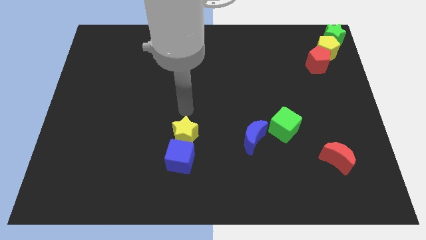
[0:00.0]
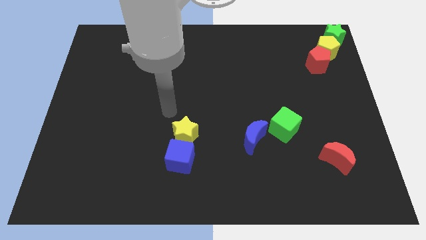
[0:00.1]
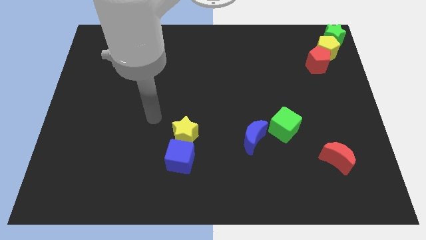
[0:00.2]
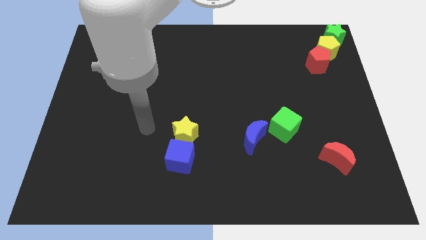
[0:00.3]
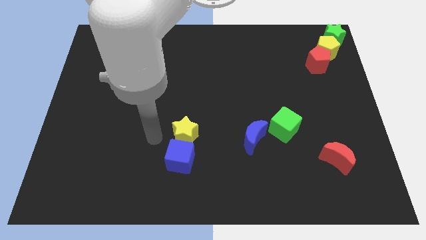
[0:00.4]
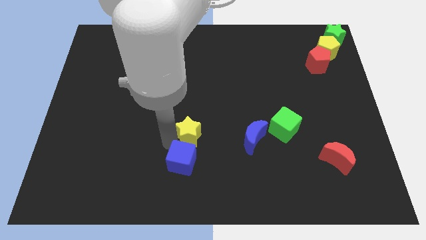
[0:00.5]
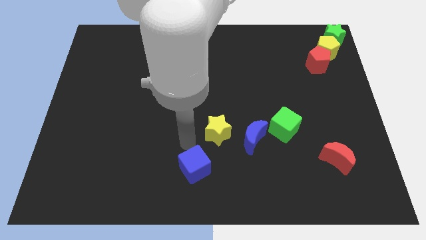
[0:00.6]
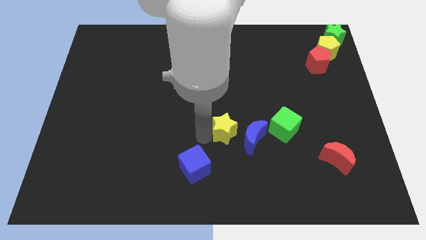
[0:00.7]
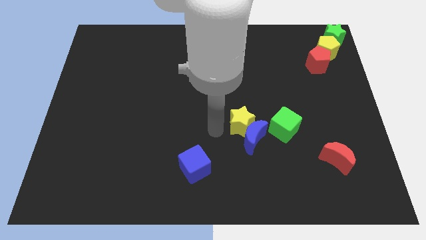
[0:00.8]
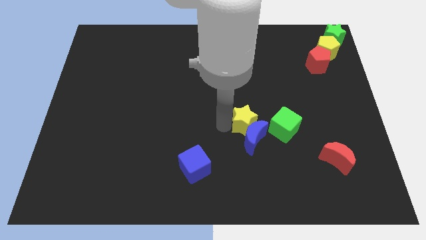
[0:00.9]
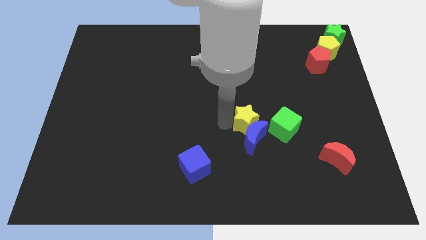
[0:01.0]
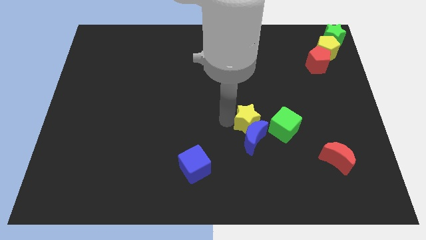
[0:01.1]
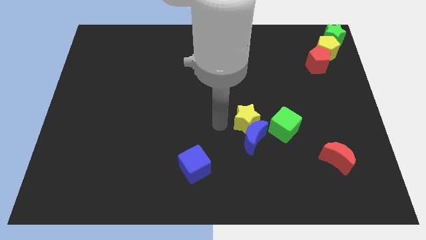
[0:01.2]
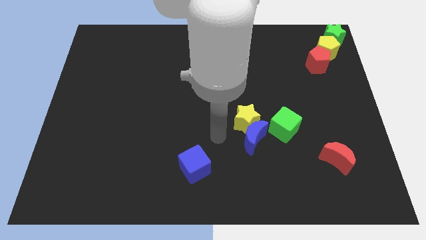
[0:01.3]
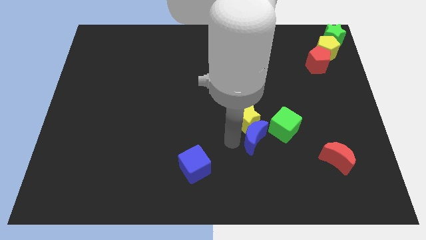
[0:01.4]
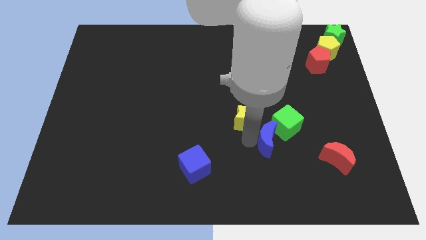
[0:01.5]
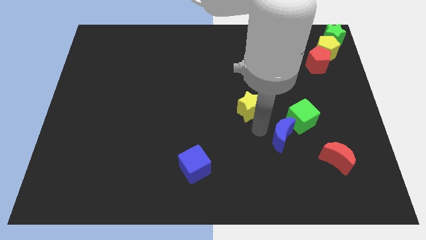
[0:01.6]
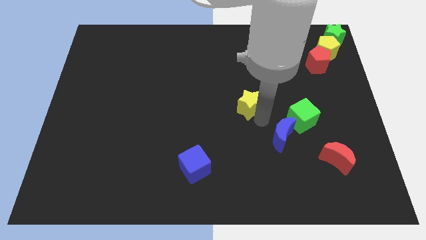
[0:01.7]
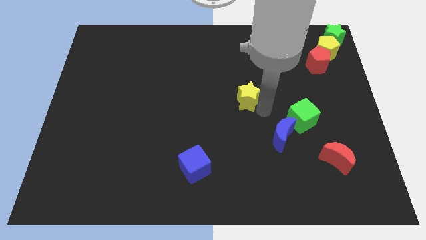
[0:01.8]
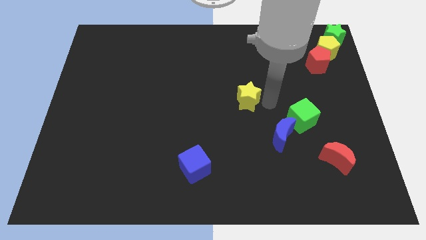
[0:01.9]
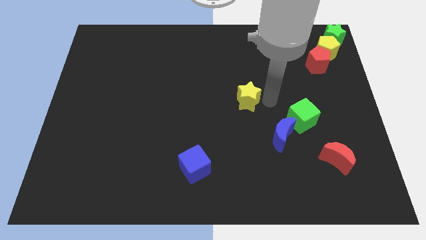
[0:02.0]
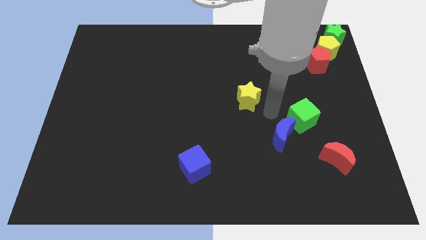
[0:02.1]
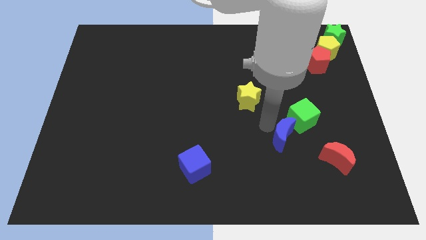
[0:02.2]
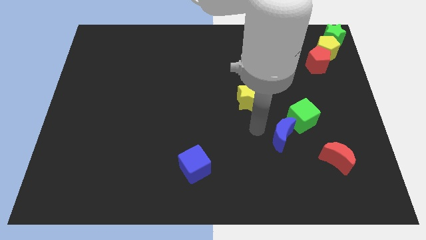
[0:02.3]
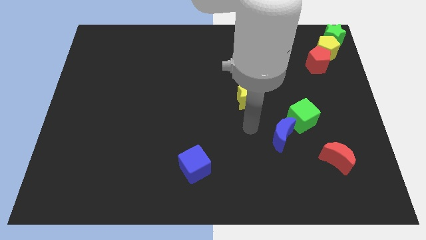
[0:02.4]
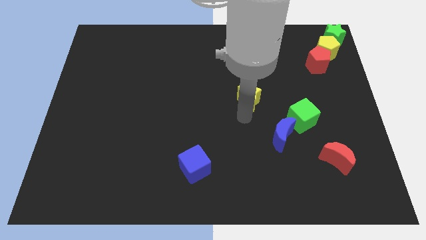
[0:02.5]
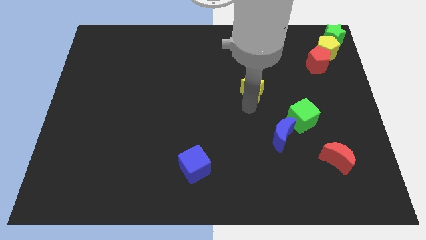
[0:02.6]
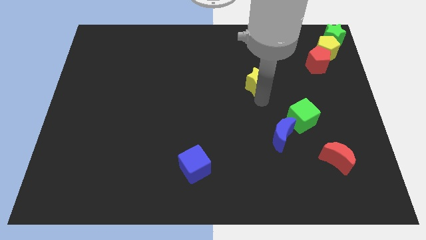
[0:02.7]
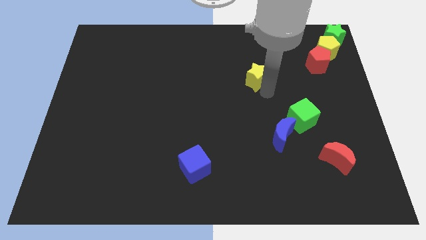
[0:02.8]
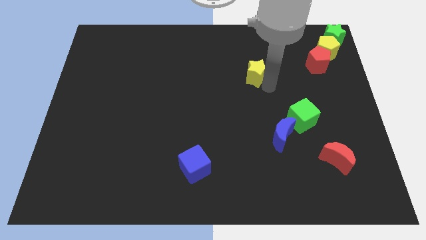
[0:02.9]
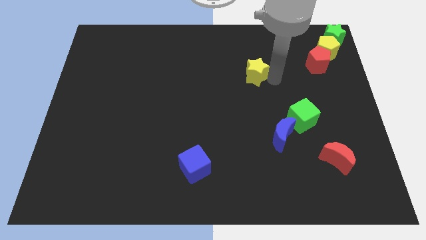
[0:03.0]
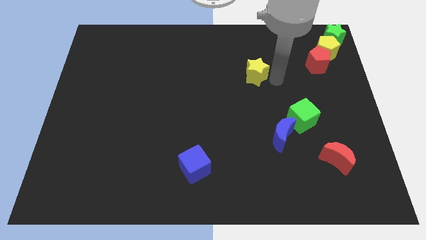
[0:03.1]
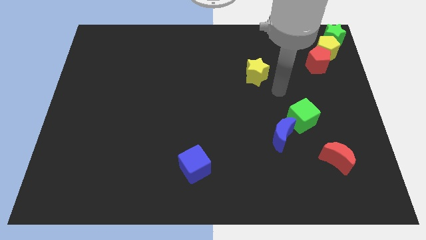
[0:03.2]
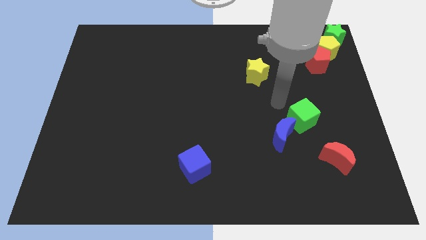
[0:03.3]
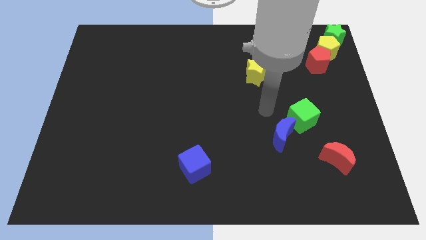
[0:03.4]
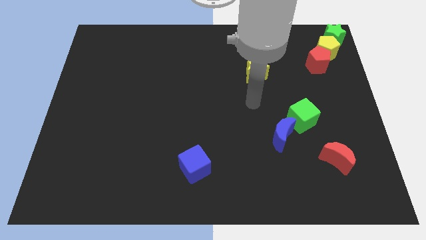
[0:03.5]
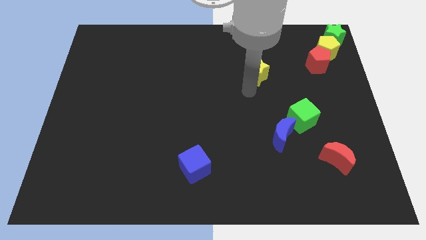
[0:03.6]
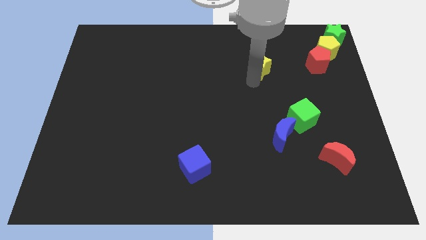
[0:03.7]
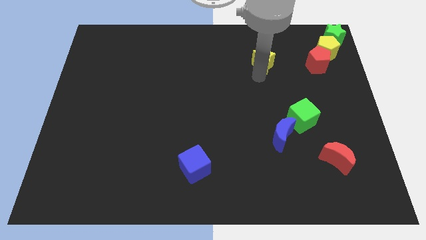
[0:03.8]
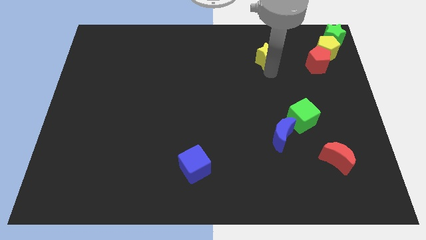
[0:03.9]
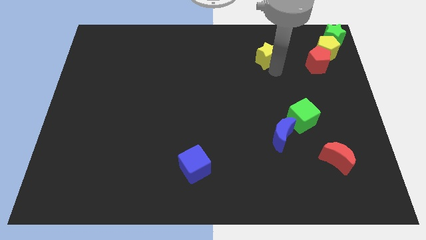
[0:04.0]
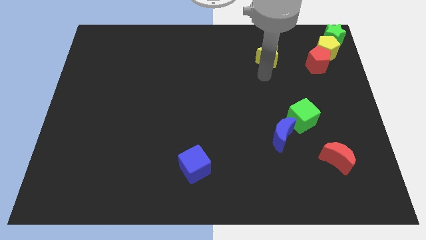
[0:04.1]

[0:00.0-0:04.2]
push the yellow star to the left of the red pentagon

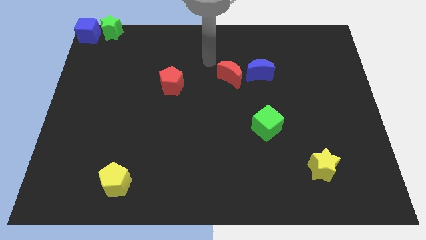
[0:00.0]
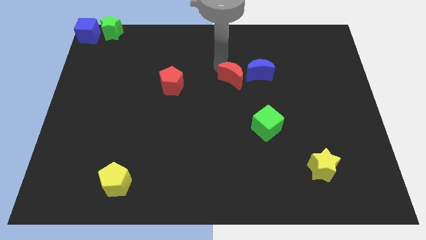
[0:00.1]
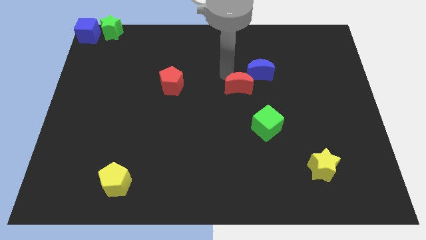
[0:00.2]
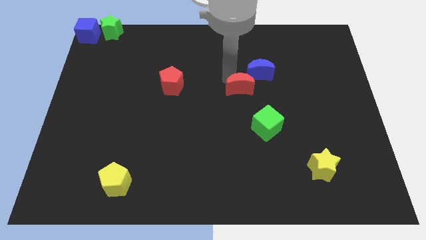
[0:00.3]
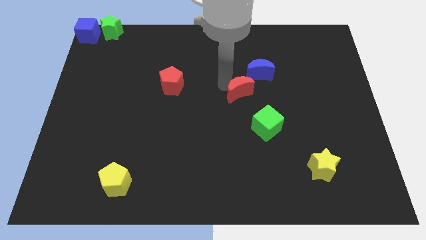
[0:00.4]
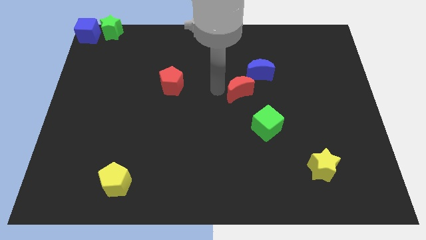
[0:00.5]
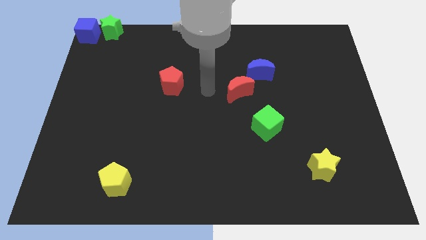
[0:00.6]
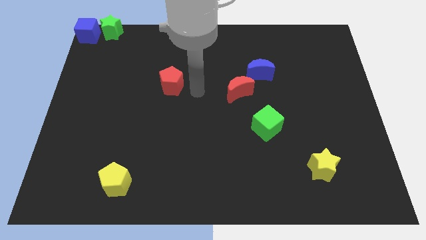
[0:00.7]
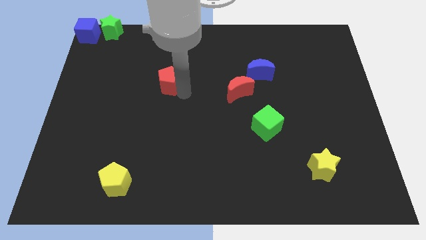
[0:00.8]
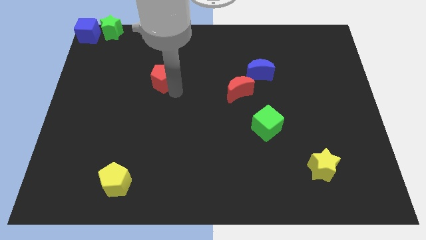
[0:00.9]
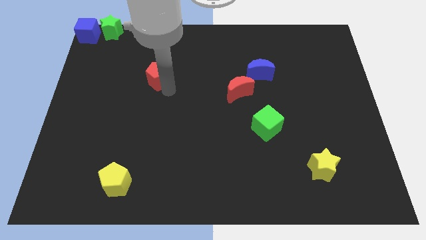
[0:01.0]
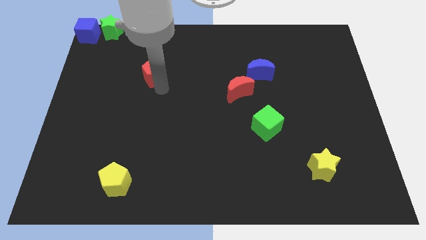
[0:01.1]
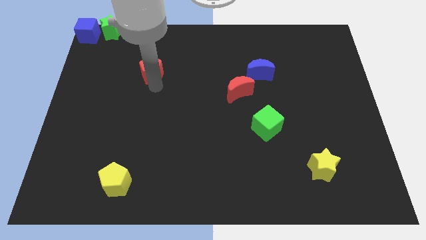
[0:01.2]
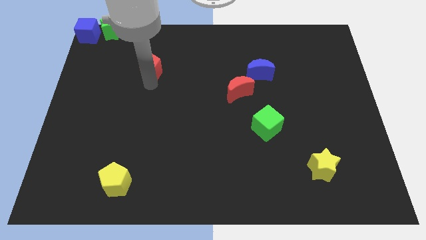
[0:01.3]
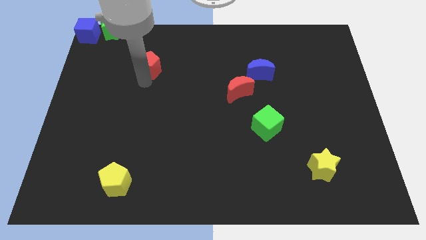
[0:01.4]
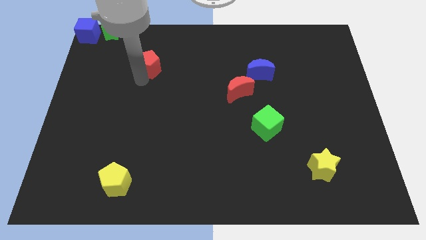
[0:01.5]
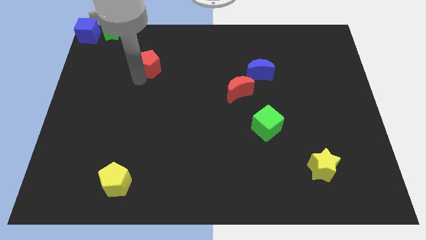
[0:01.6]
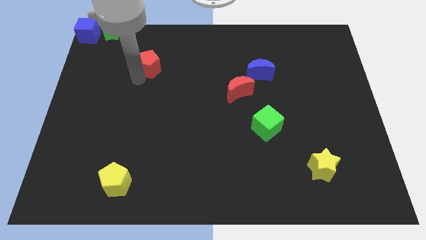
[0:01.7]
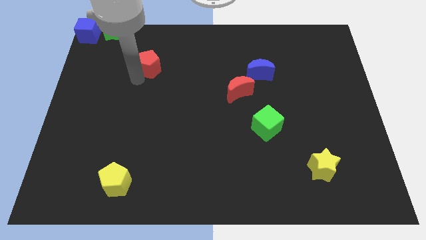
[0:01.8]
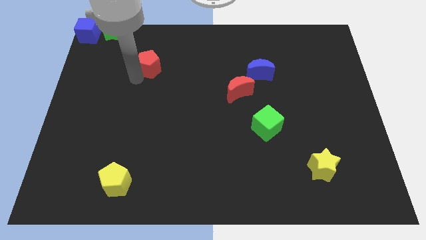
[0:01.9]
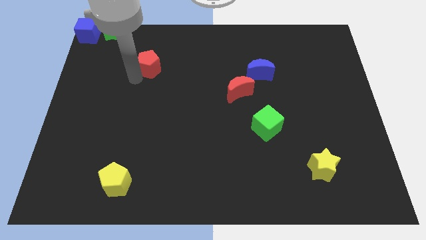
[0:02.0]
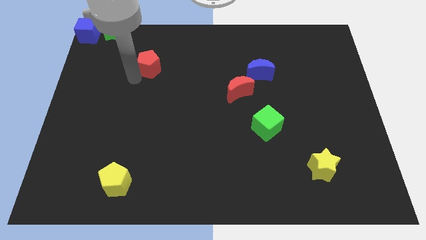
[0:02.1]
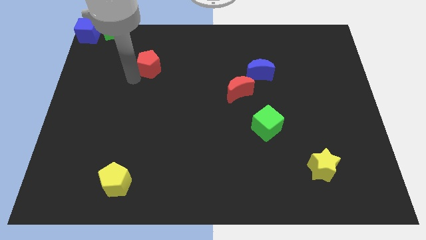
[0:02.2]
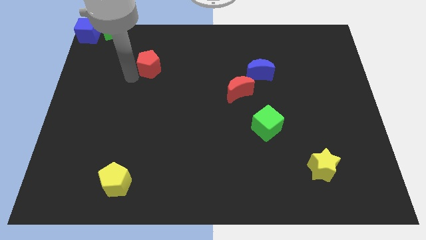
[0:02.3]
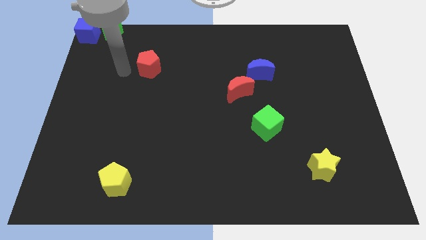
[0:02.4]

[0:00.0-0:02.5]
move the red pentagon diagonal to the green star

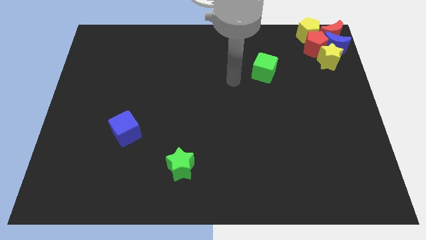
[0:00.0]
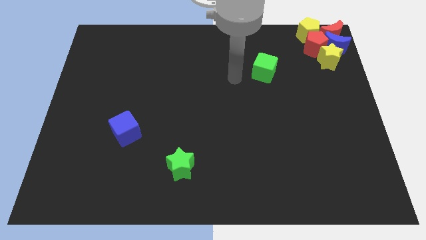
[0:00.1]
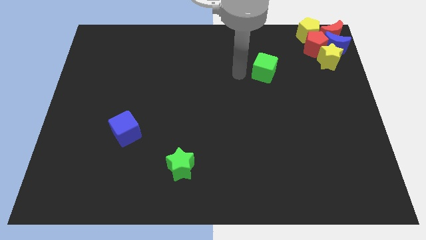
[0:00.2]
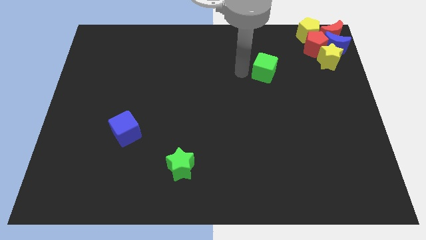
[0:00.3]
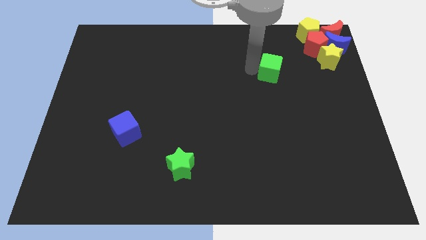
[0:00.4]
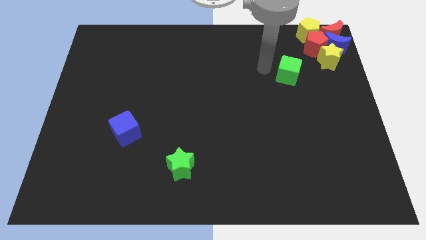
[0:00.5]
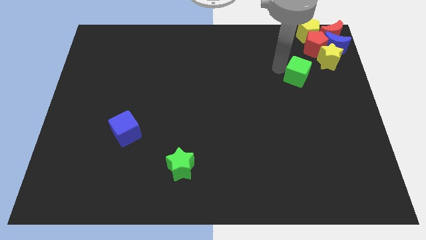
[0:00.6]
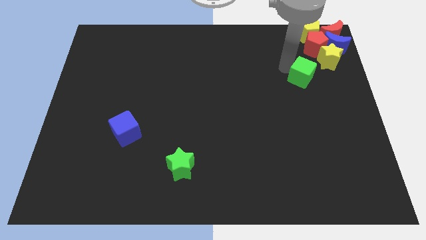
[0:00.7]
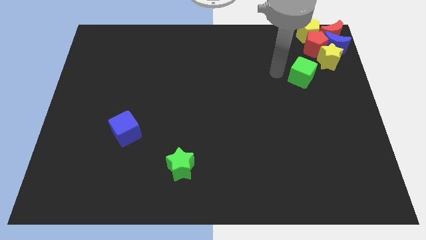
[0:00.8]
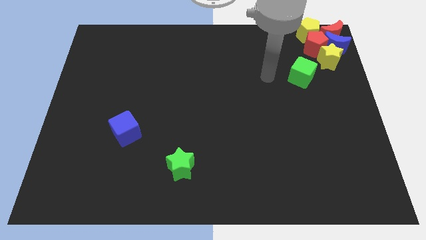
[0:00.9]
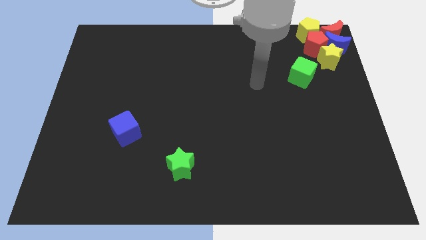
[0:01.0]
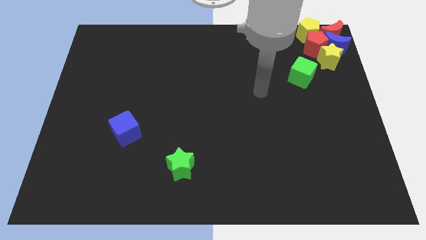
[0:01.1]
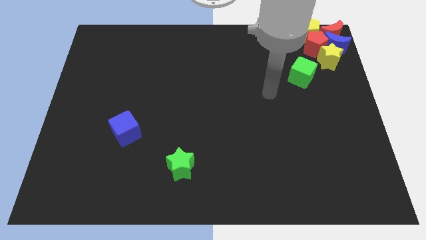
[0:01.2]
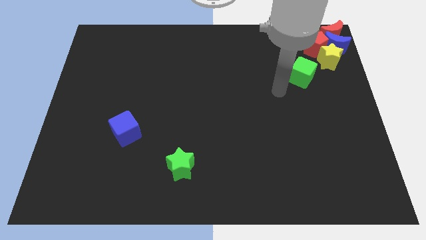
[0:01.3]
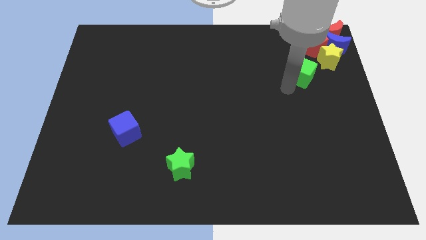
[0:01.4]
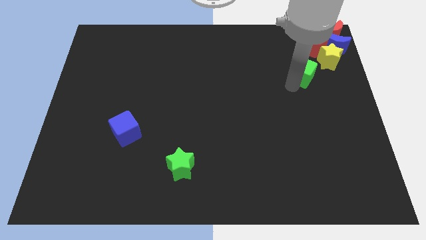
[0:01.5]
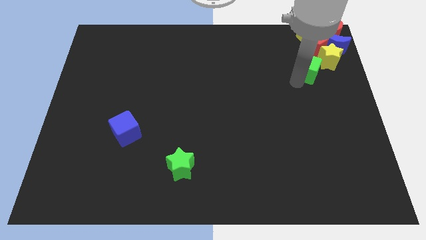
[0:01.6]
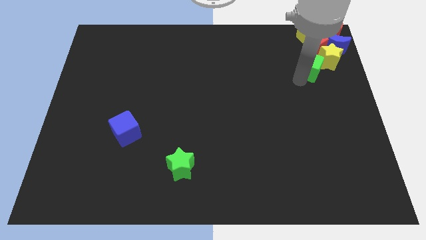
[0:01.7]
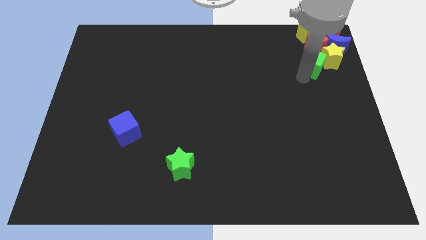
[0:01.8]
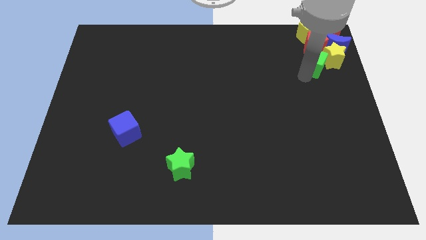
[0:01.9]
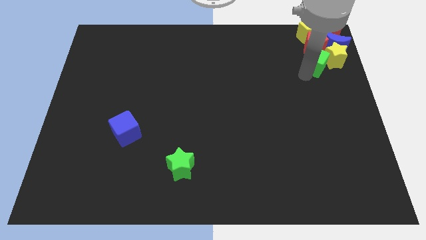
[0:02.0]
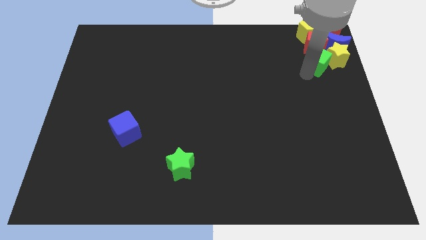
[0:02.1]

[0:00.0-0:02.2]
move the green cube to the bottom of the red pentagon
